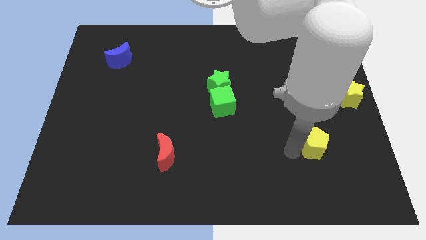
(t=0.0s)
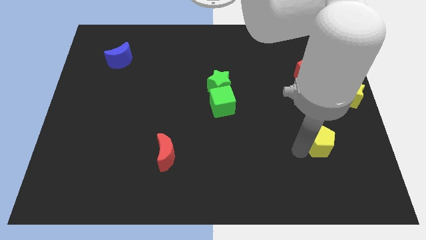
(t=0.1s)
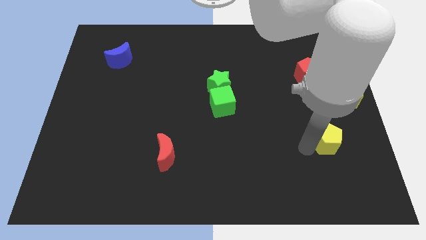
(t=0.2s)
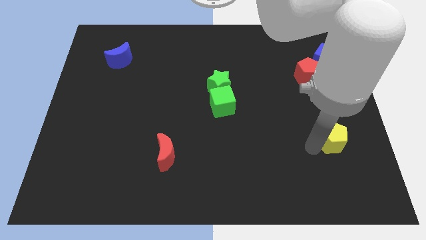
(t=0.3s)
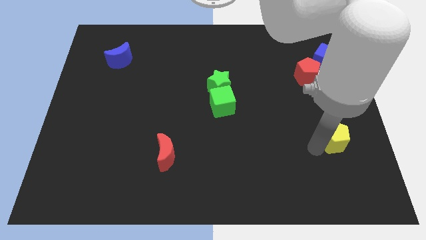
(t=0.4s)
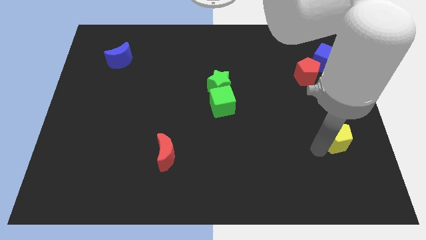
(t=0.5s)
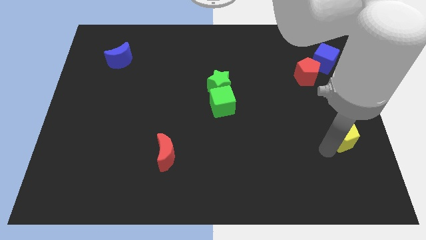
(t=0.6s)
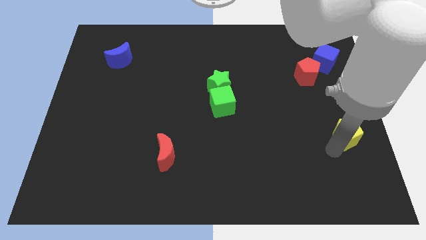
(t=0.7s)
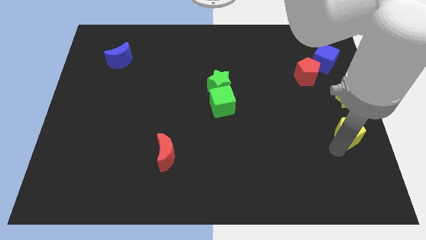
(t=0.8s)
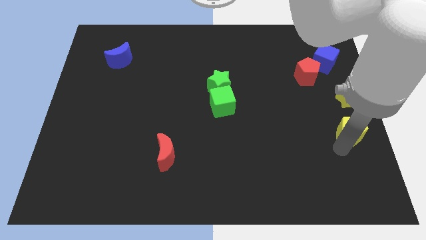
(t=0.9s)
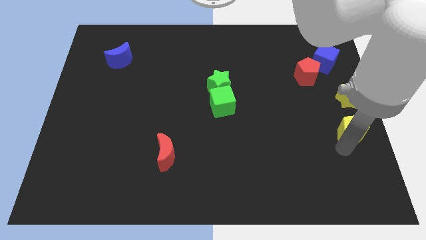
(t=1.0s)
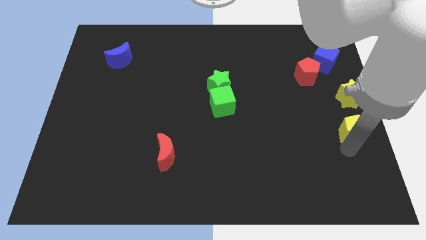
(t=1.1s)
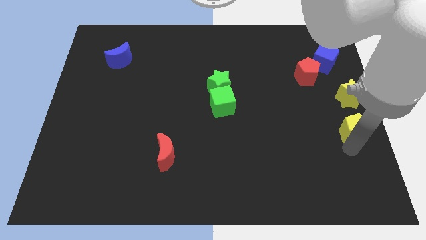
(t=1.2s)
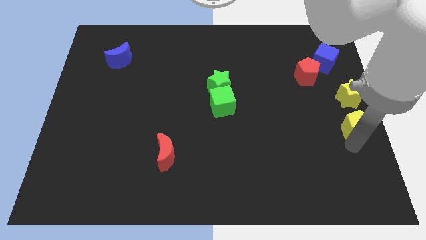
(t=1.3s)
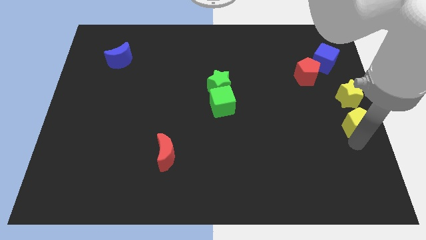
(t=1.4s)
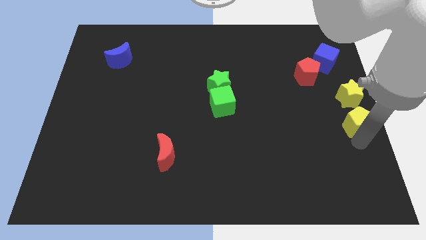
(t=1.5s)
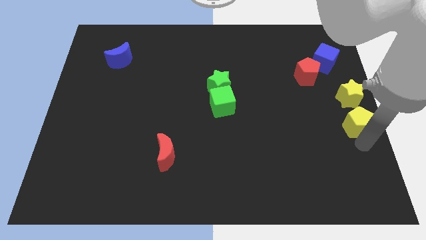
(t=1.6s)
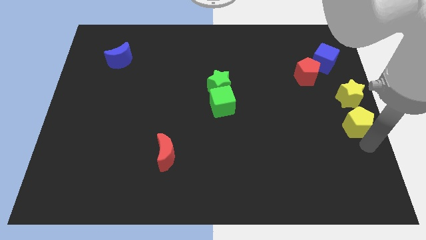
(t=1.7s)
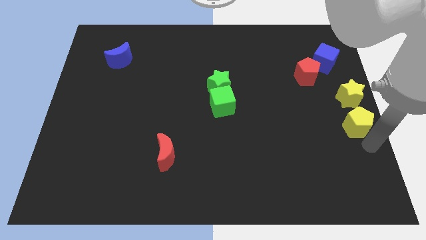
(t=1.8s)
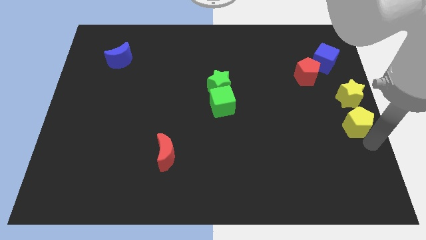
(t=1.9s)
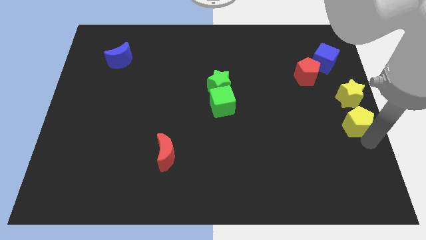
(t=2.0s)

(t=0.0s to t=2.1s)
push the yellow pentagon at the center right of the board

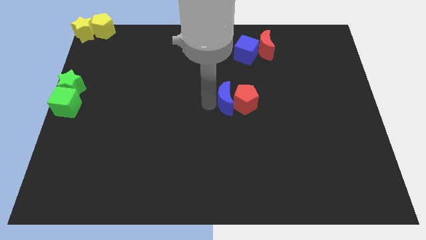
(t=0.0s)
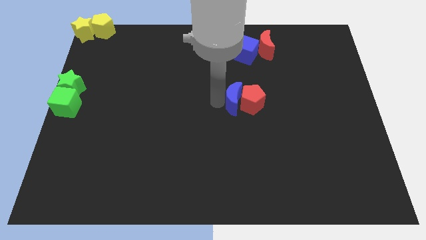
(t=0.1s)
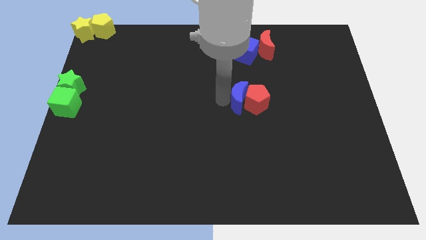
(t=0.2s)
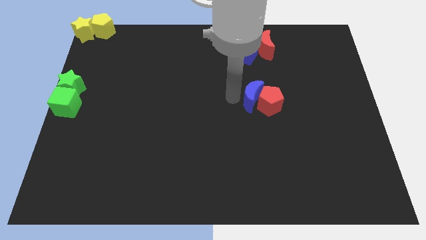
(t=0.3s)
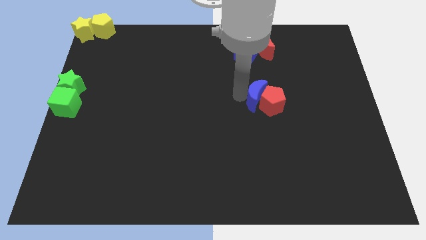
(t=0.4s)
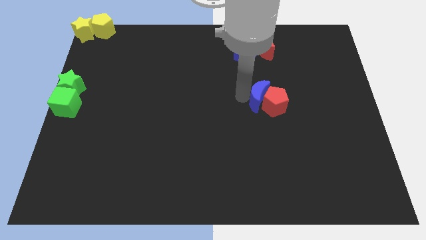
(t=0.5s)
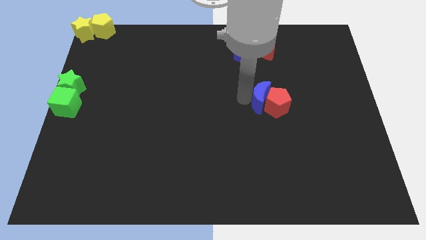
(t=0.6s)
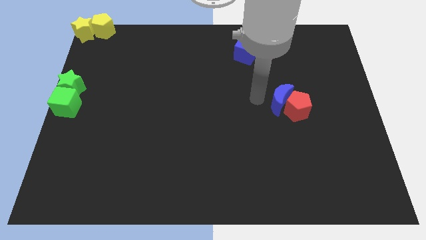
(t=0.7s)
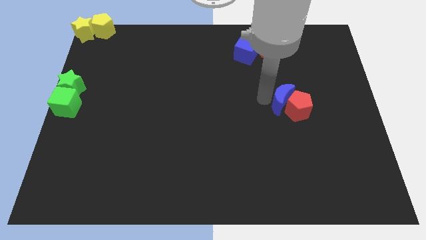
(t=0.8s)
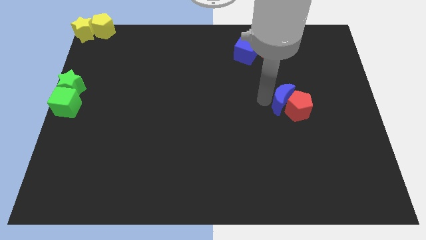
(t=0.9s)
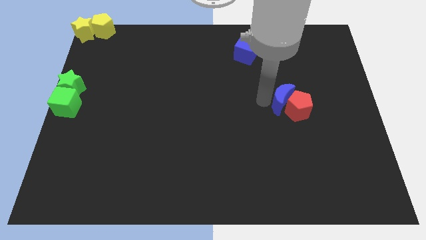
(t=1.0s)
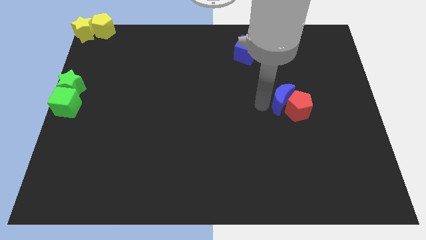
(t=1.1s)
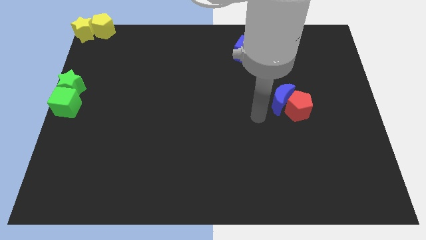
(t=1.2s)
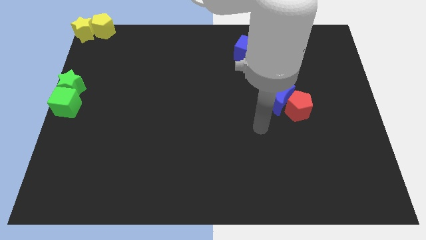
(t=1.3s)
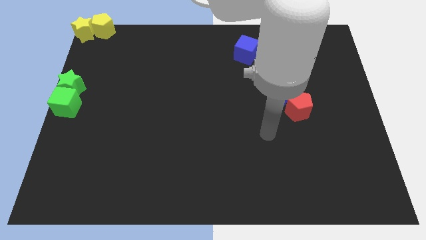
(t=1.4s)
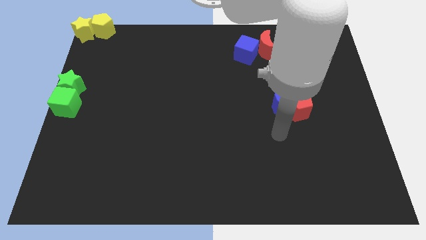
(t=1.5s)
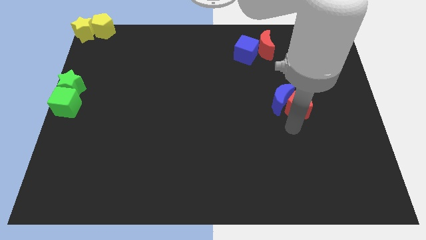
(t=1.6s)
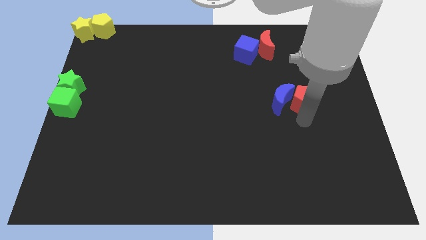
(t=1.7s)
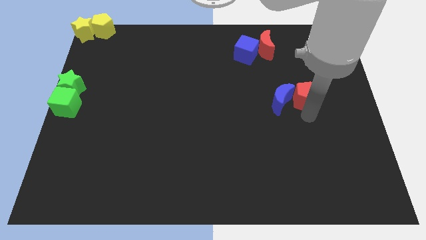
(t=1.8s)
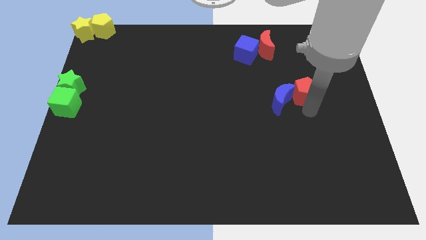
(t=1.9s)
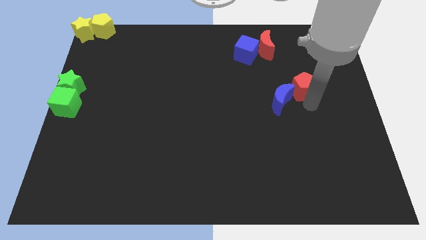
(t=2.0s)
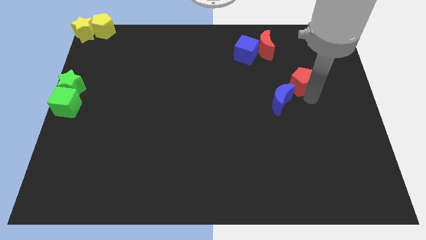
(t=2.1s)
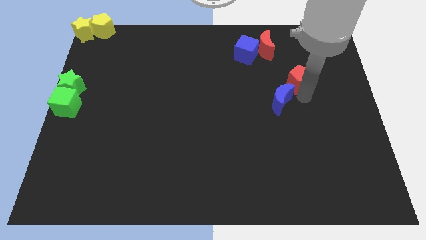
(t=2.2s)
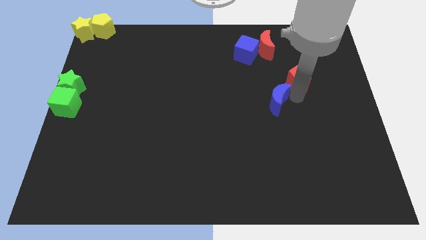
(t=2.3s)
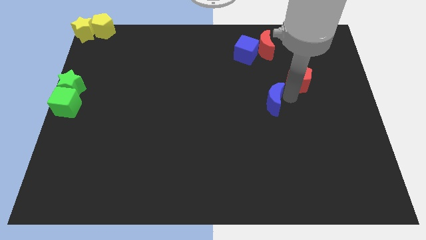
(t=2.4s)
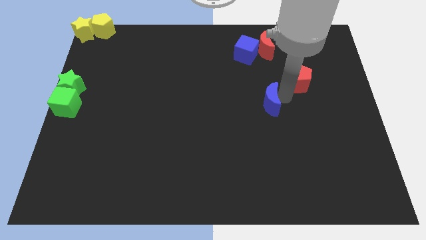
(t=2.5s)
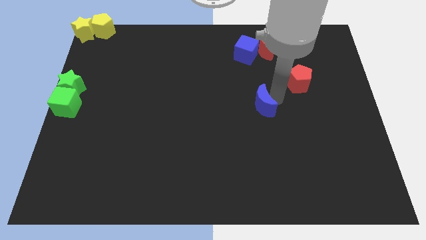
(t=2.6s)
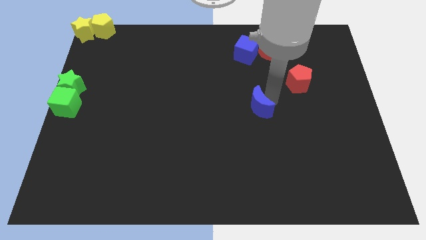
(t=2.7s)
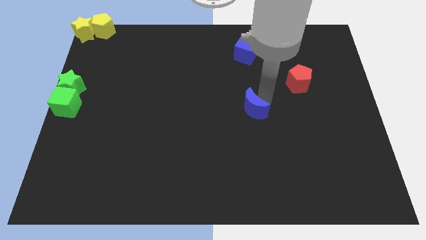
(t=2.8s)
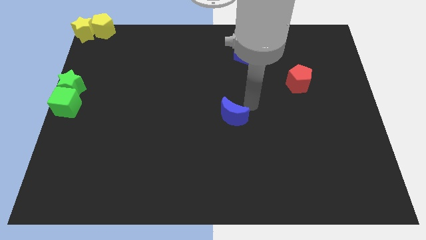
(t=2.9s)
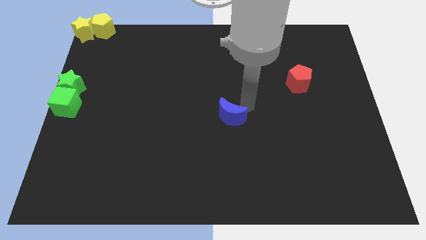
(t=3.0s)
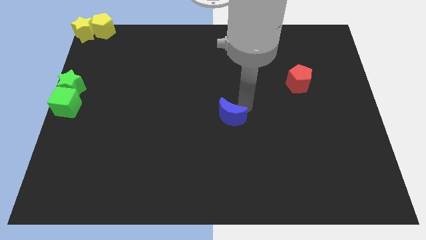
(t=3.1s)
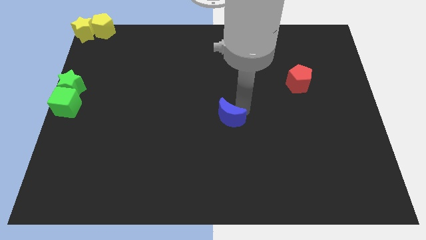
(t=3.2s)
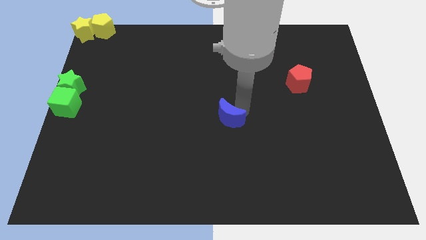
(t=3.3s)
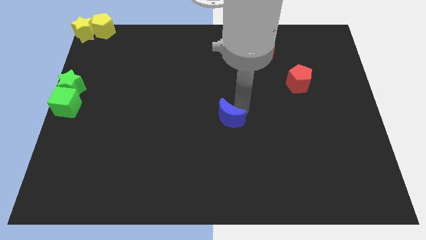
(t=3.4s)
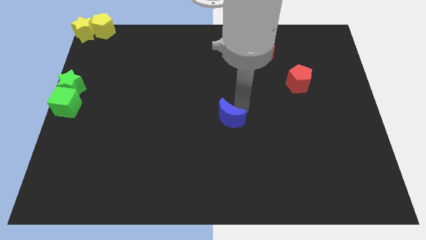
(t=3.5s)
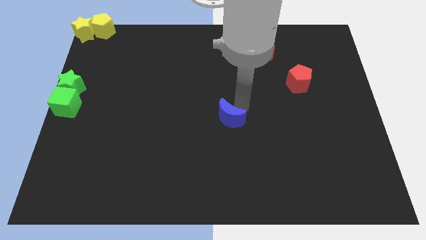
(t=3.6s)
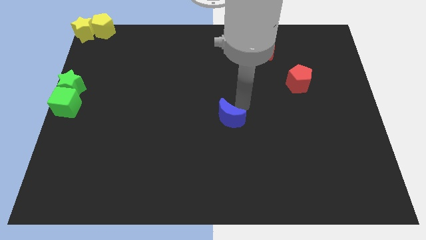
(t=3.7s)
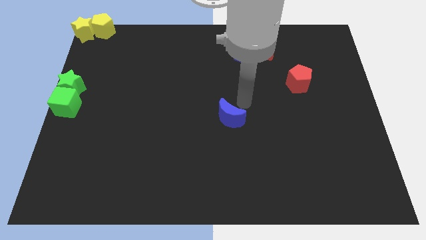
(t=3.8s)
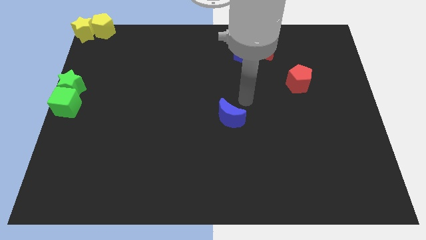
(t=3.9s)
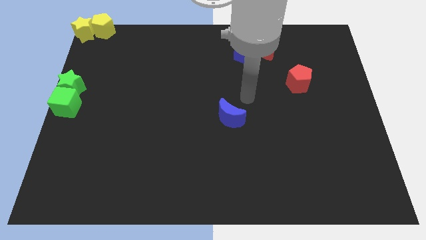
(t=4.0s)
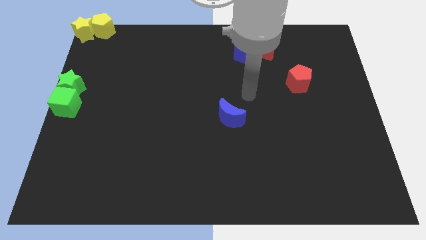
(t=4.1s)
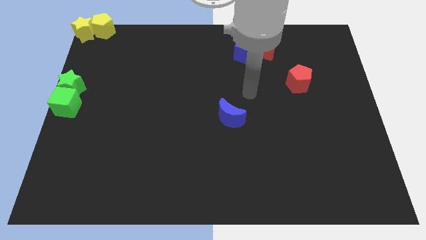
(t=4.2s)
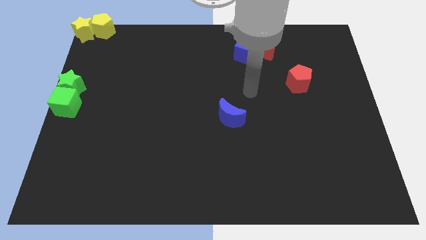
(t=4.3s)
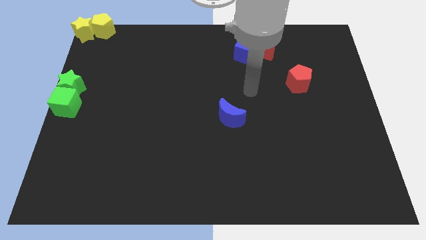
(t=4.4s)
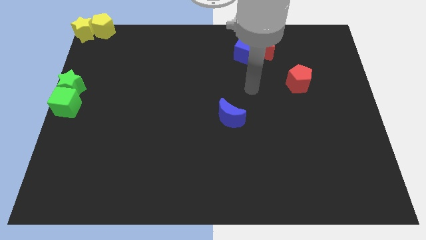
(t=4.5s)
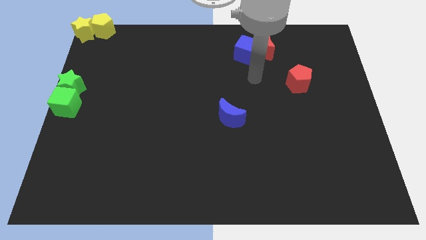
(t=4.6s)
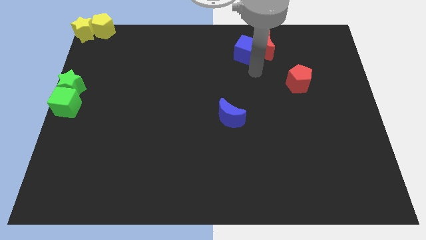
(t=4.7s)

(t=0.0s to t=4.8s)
separate the blue moon and red pentagon

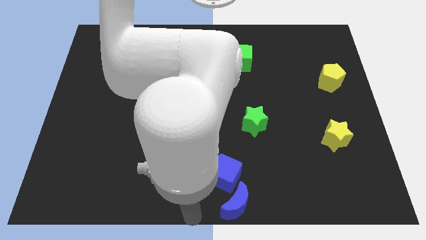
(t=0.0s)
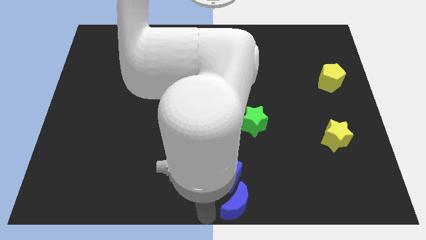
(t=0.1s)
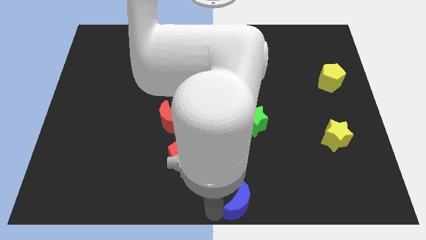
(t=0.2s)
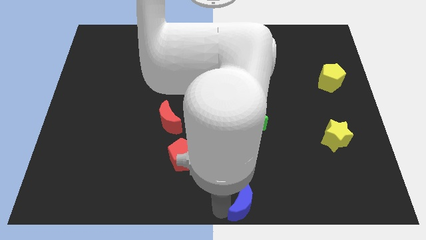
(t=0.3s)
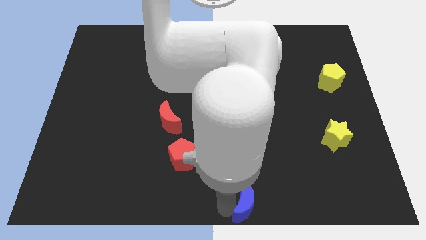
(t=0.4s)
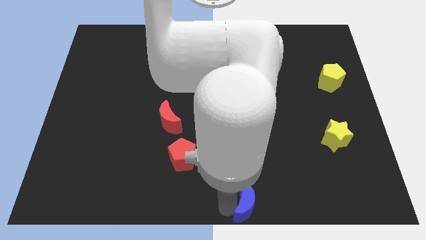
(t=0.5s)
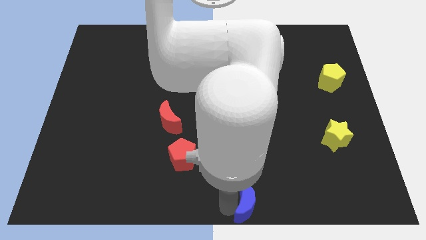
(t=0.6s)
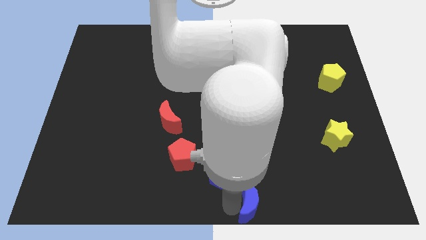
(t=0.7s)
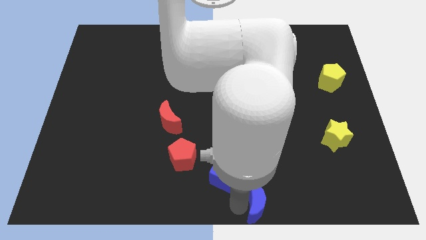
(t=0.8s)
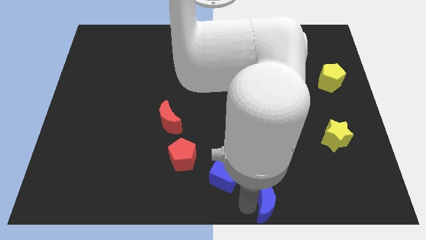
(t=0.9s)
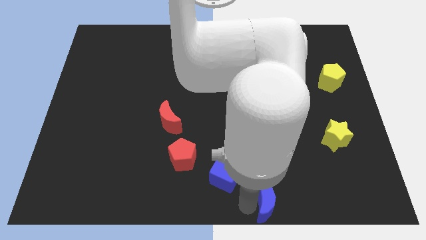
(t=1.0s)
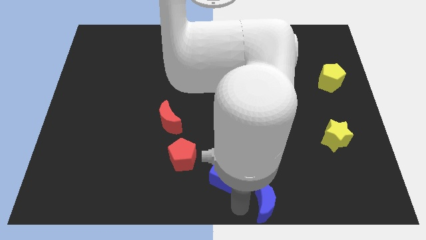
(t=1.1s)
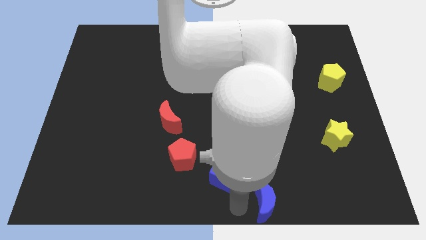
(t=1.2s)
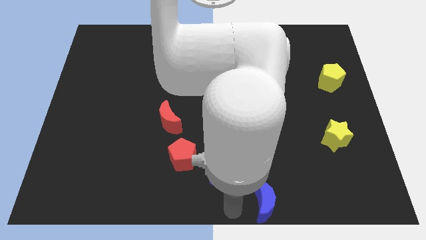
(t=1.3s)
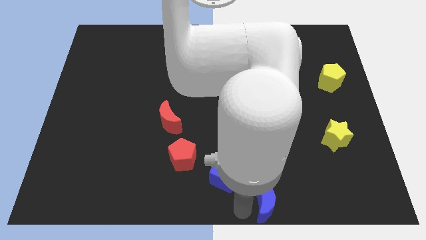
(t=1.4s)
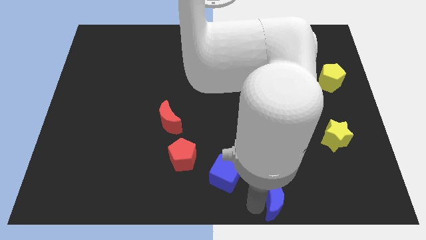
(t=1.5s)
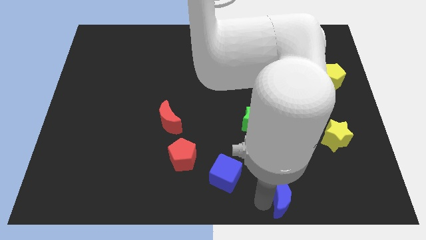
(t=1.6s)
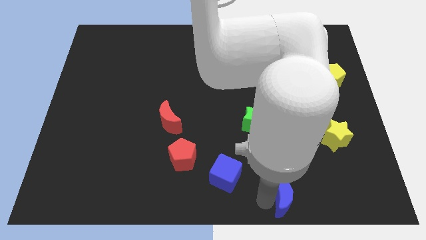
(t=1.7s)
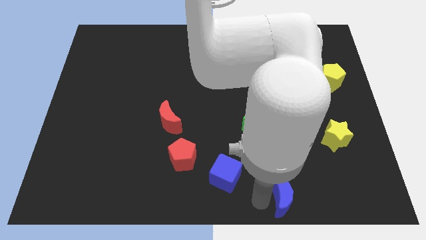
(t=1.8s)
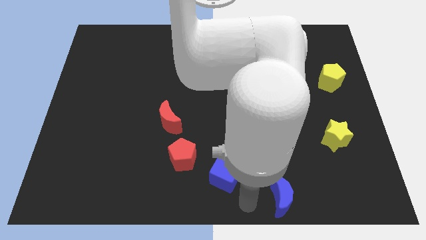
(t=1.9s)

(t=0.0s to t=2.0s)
separate the blue moon from blue cube
